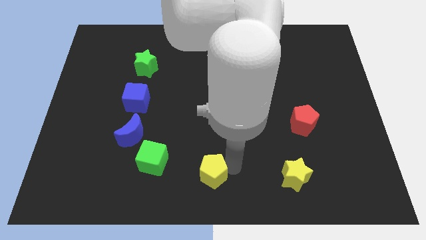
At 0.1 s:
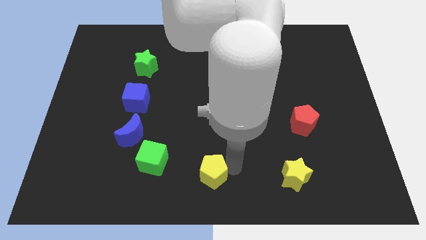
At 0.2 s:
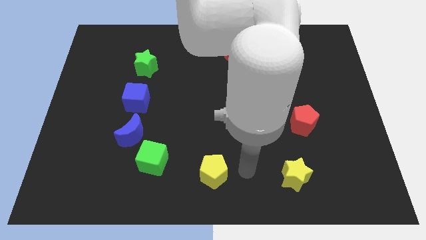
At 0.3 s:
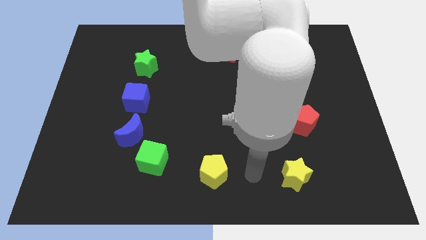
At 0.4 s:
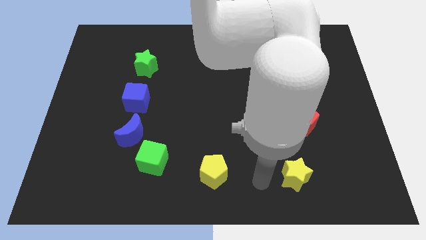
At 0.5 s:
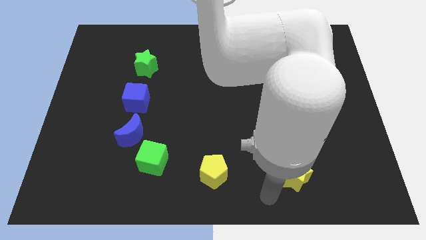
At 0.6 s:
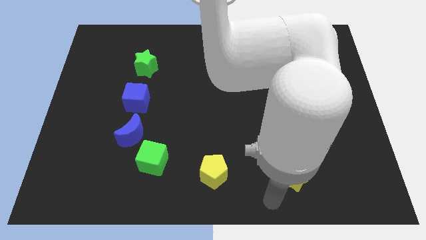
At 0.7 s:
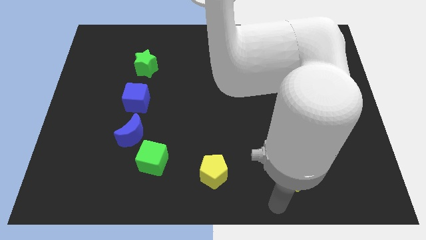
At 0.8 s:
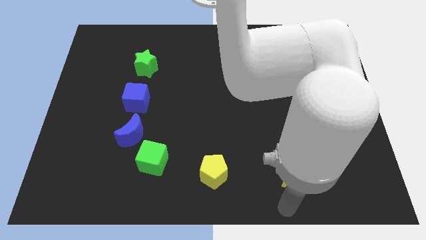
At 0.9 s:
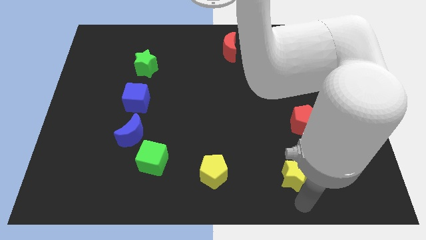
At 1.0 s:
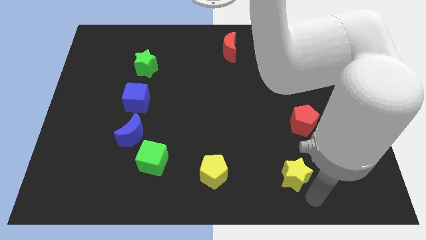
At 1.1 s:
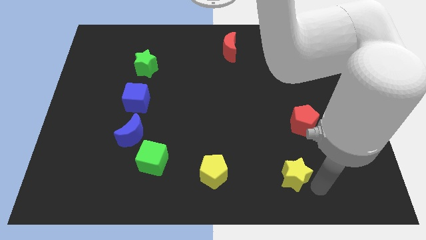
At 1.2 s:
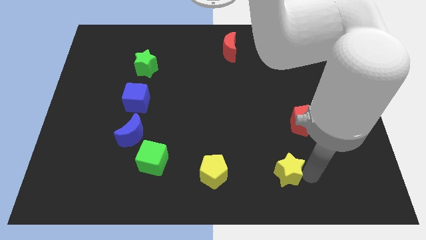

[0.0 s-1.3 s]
place the arm right to the yellow star

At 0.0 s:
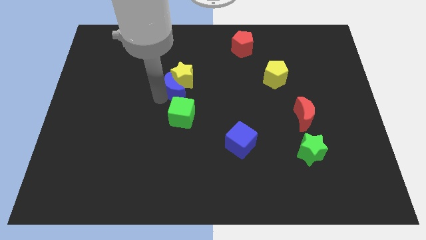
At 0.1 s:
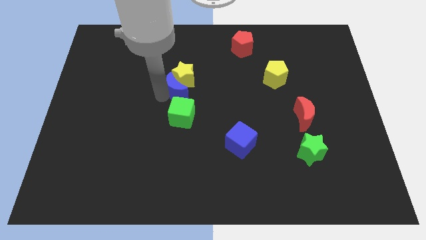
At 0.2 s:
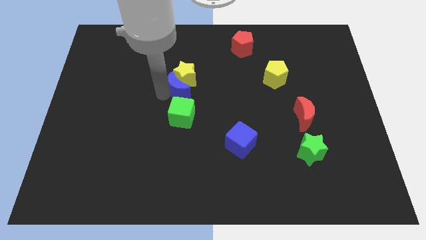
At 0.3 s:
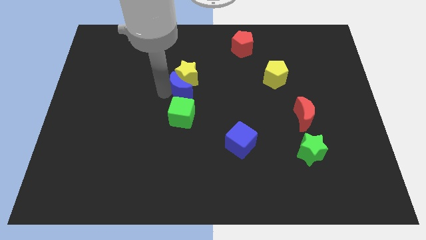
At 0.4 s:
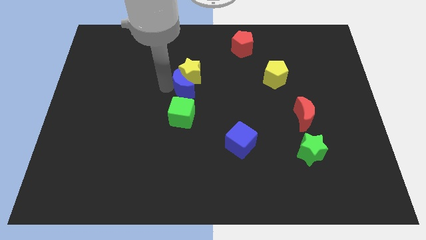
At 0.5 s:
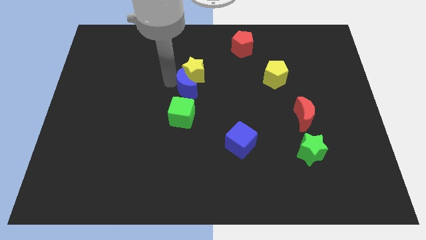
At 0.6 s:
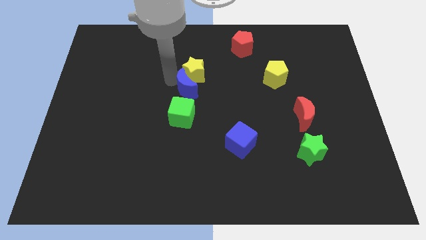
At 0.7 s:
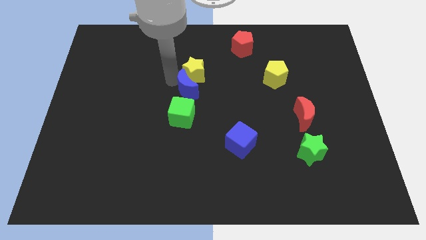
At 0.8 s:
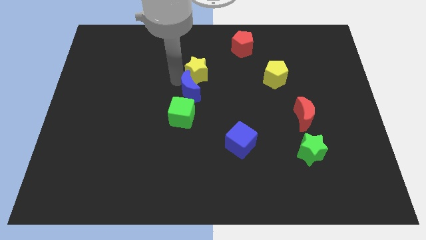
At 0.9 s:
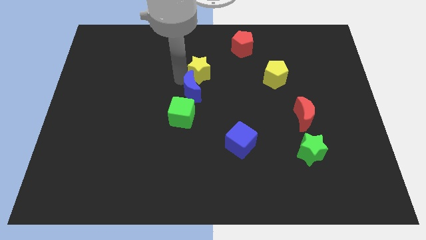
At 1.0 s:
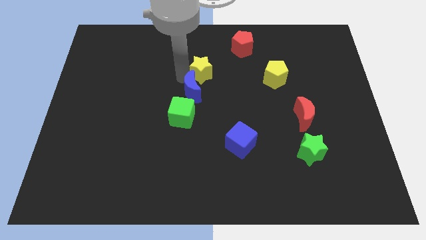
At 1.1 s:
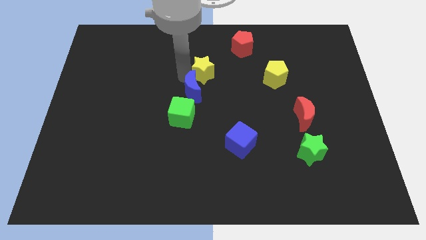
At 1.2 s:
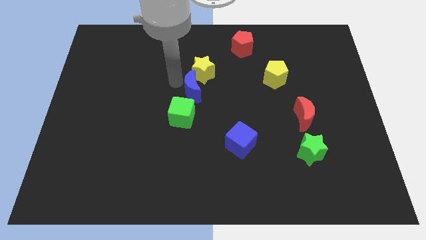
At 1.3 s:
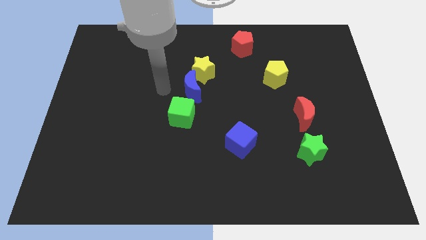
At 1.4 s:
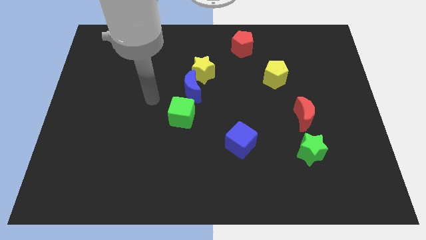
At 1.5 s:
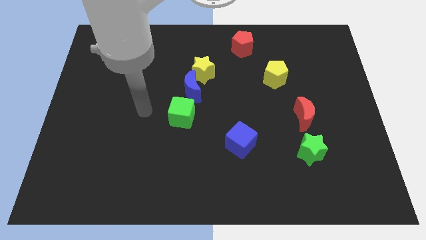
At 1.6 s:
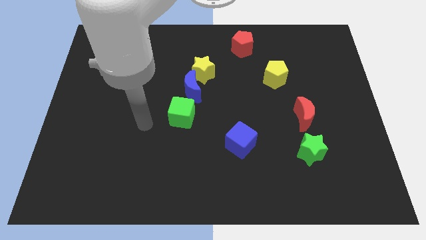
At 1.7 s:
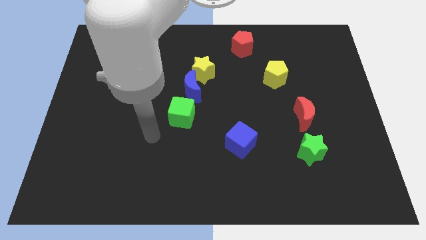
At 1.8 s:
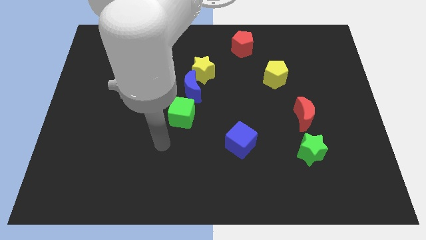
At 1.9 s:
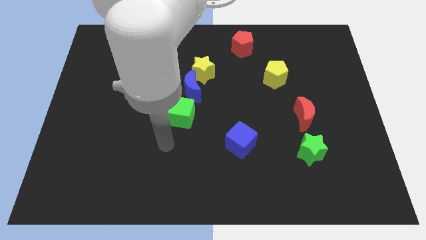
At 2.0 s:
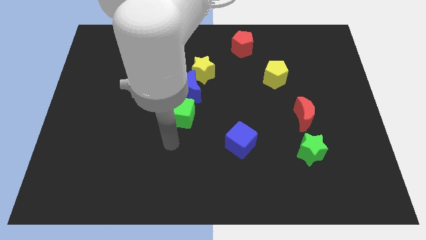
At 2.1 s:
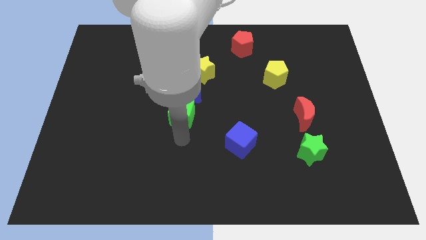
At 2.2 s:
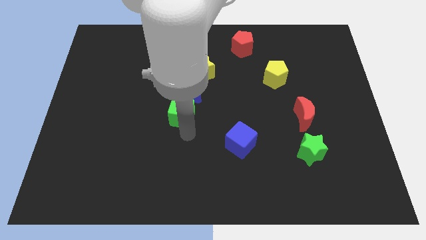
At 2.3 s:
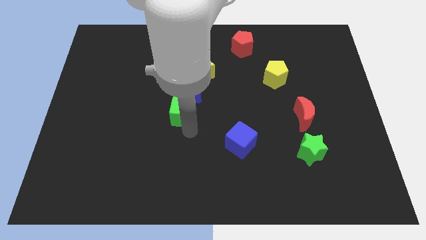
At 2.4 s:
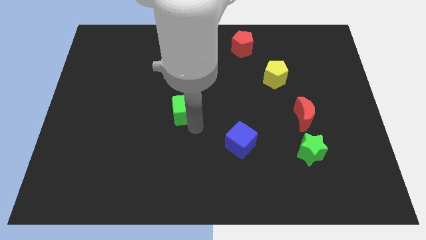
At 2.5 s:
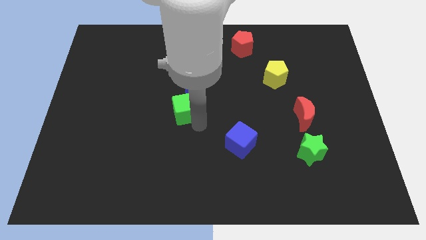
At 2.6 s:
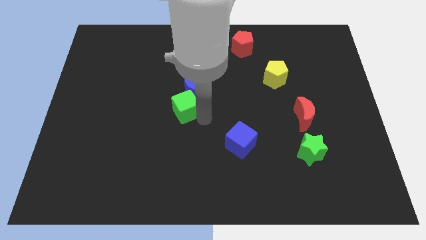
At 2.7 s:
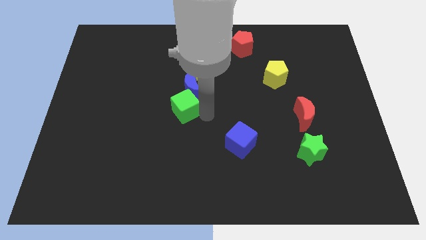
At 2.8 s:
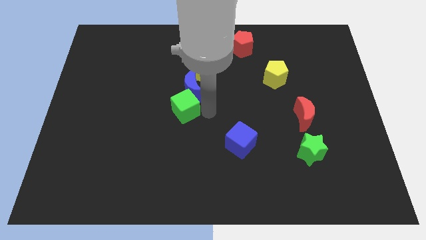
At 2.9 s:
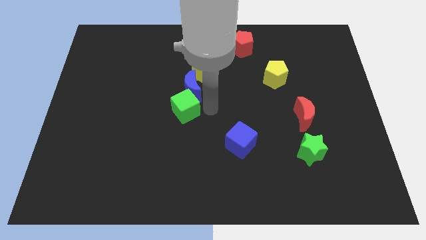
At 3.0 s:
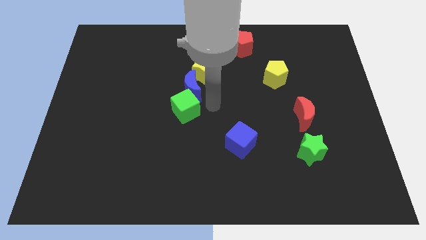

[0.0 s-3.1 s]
push the blue moon slightly to the center

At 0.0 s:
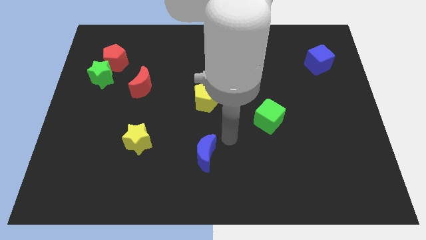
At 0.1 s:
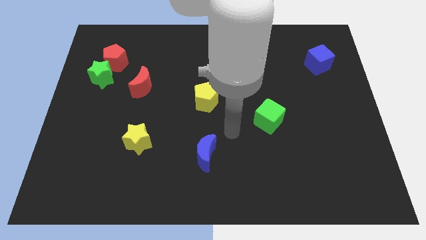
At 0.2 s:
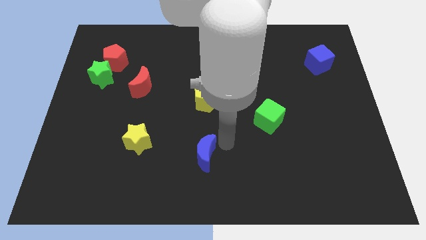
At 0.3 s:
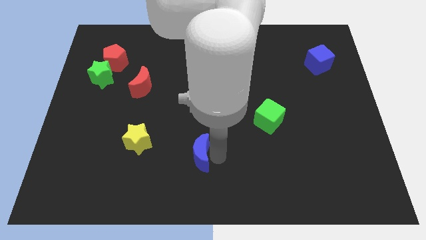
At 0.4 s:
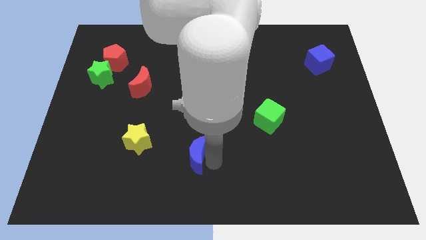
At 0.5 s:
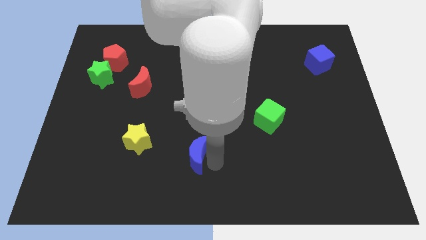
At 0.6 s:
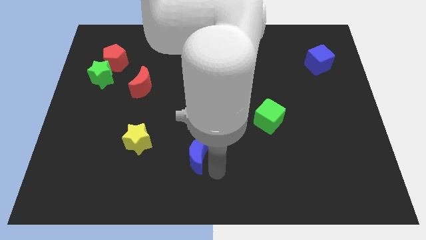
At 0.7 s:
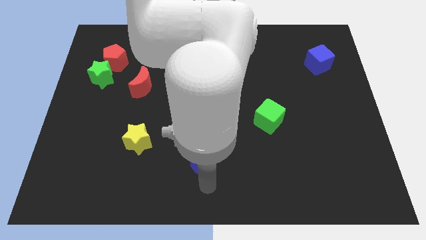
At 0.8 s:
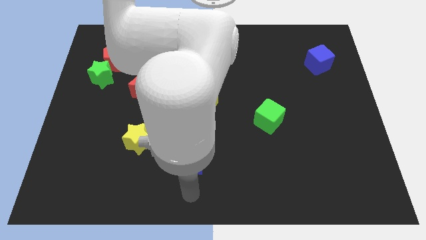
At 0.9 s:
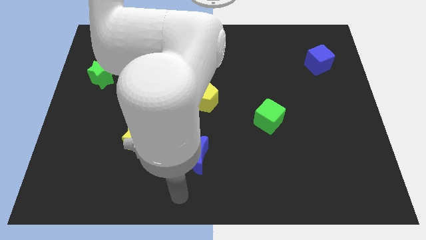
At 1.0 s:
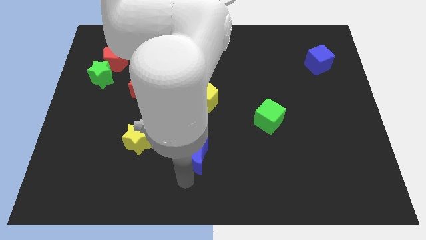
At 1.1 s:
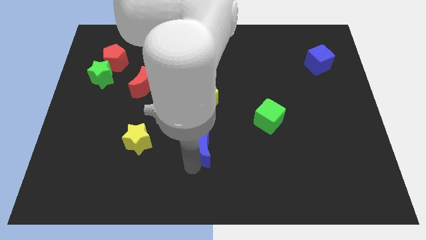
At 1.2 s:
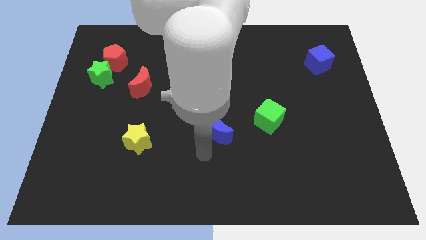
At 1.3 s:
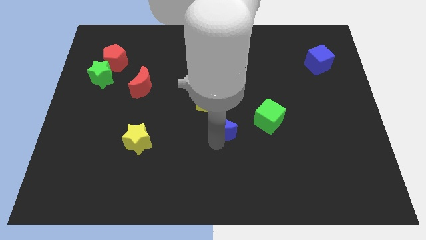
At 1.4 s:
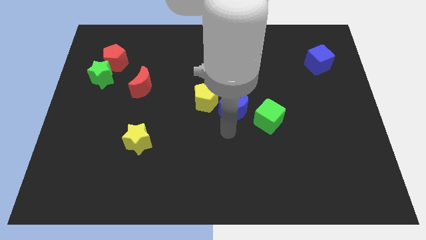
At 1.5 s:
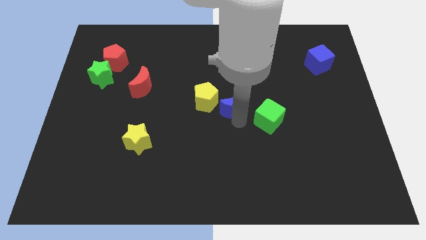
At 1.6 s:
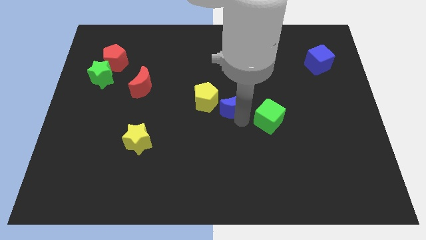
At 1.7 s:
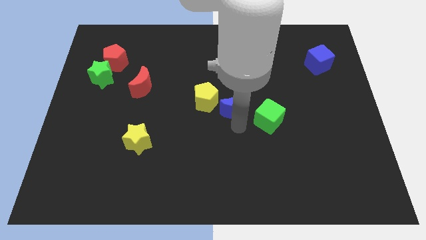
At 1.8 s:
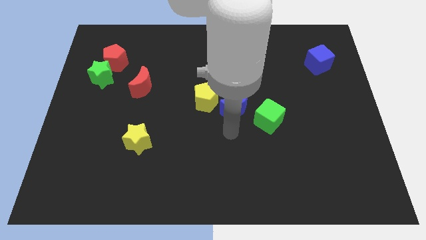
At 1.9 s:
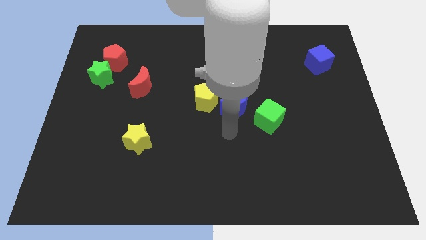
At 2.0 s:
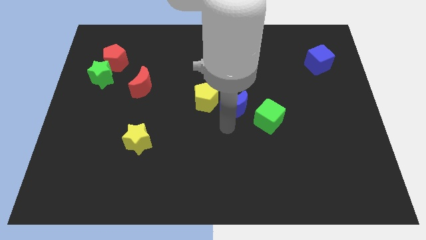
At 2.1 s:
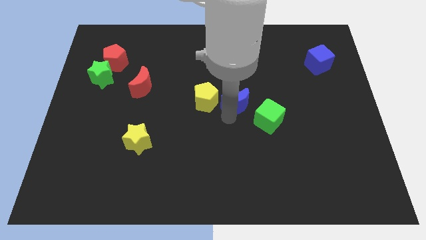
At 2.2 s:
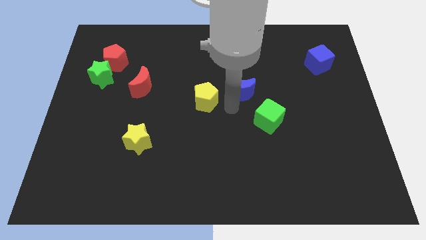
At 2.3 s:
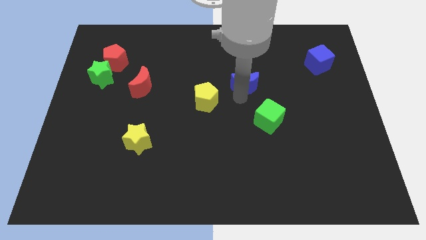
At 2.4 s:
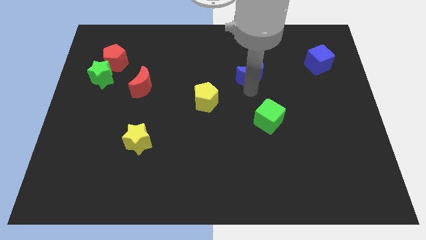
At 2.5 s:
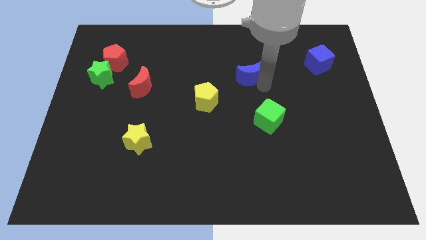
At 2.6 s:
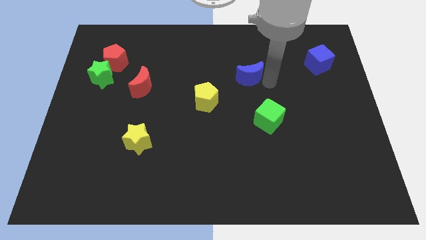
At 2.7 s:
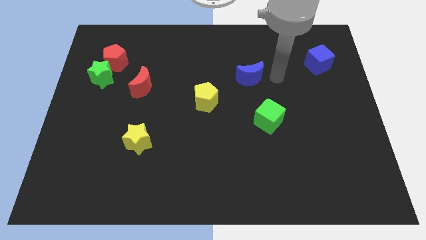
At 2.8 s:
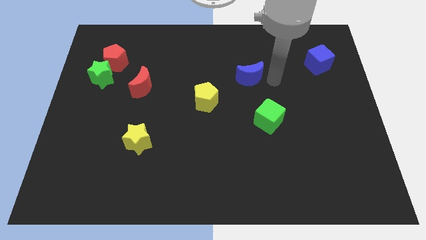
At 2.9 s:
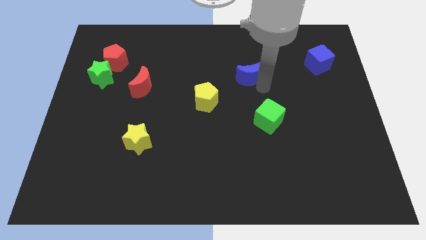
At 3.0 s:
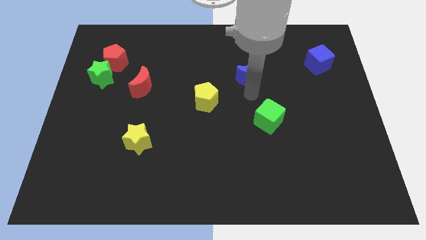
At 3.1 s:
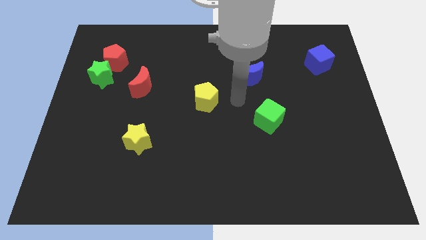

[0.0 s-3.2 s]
place blue moon parallel to blue cube

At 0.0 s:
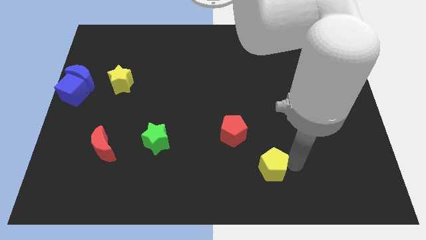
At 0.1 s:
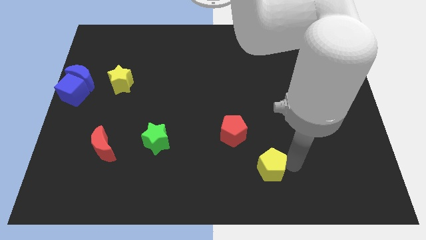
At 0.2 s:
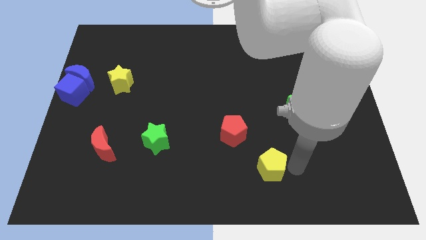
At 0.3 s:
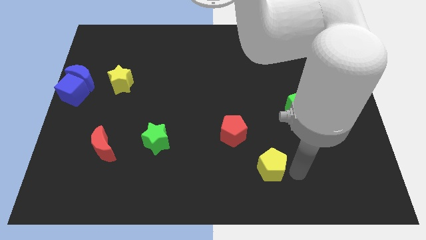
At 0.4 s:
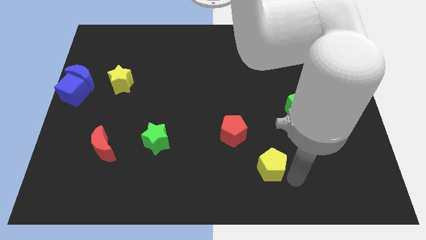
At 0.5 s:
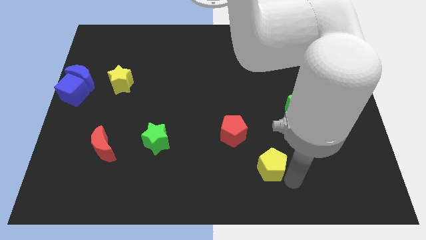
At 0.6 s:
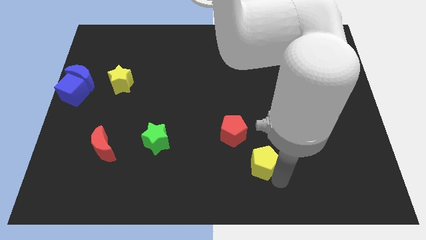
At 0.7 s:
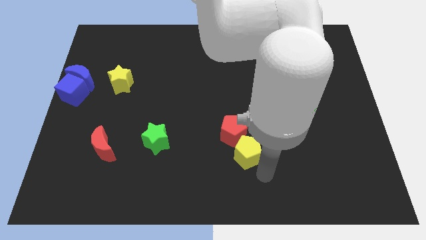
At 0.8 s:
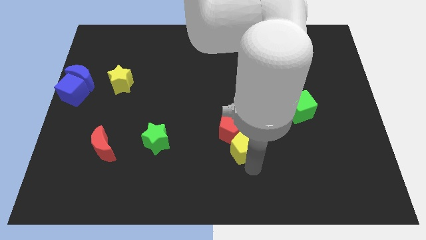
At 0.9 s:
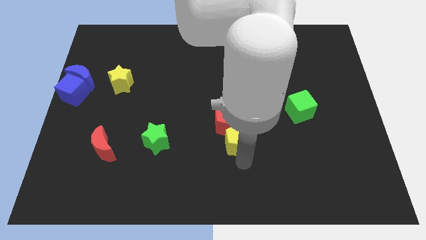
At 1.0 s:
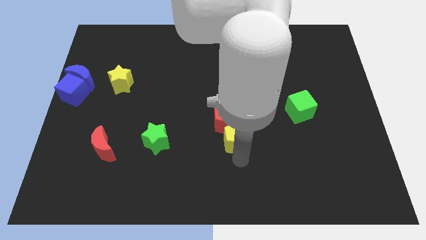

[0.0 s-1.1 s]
move the yellow pentagon below the red pentagon

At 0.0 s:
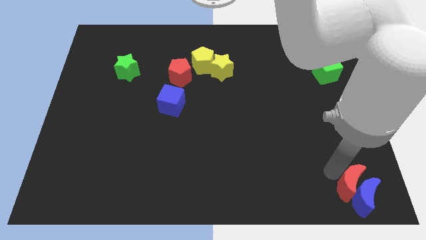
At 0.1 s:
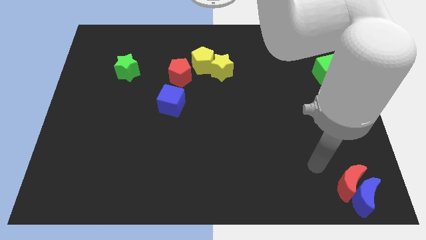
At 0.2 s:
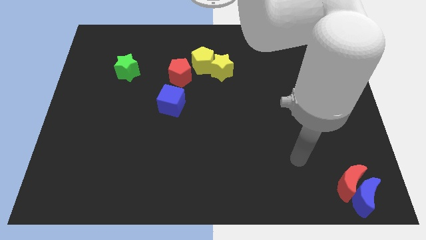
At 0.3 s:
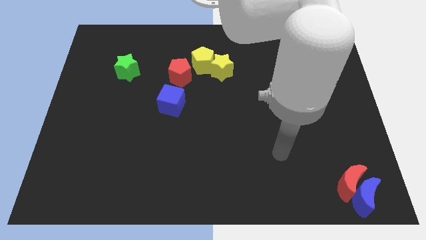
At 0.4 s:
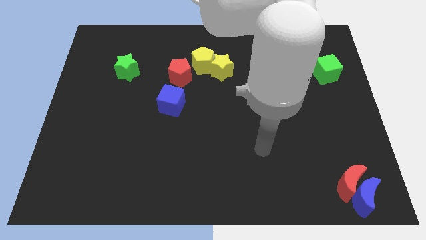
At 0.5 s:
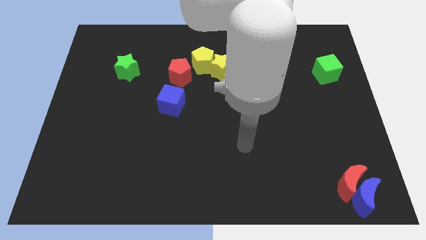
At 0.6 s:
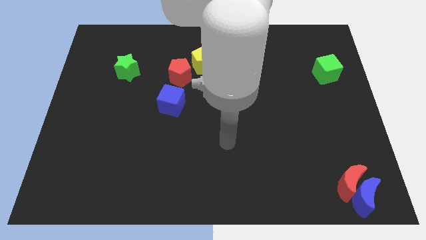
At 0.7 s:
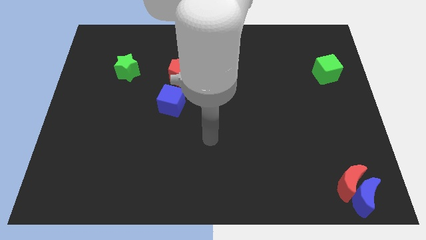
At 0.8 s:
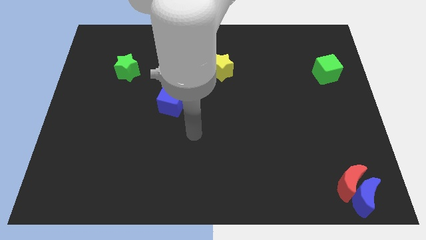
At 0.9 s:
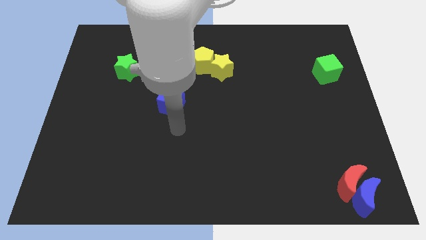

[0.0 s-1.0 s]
move the arm away from the red moon
